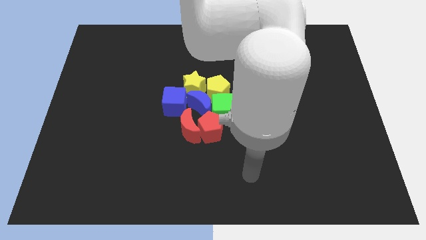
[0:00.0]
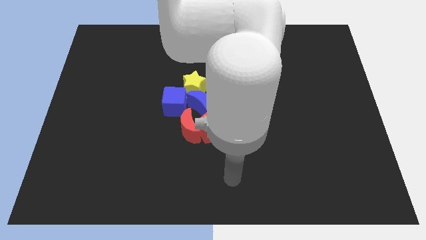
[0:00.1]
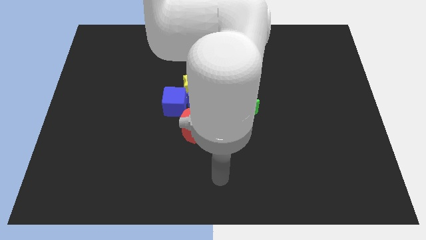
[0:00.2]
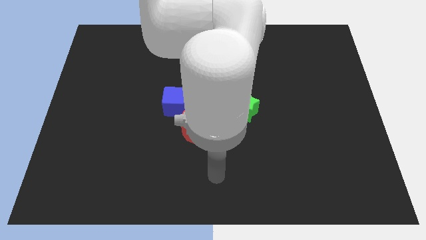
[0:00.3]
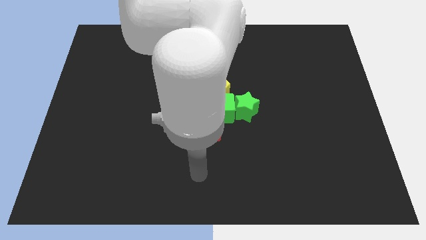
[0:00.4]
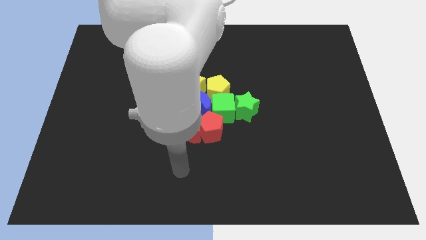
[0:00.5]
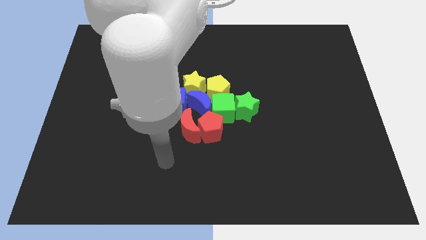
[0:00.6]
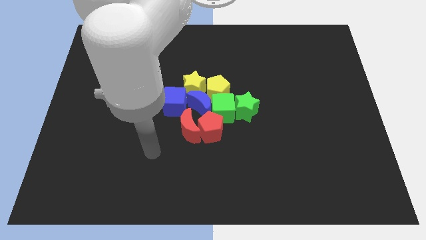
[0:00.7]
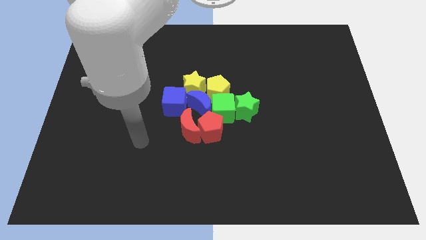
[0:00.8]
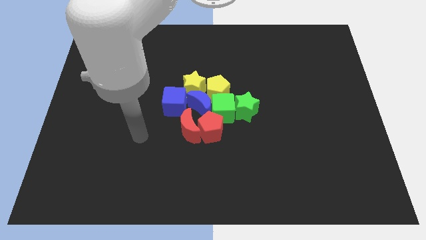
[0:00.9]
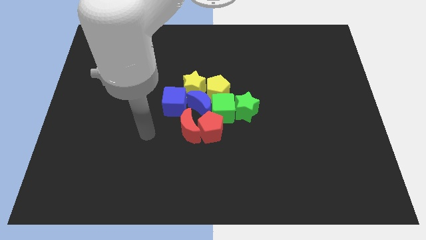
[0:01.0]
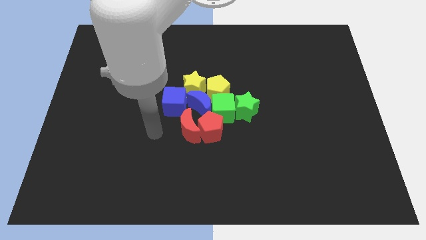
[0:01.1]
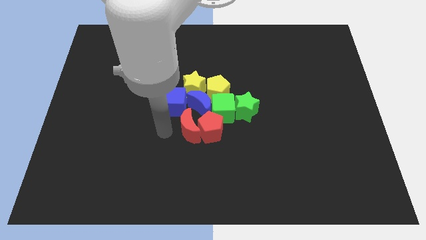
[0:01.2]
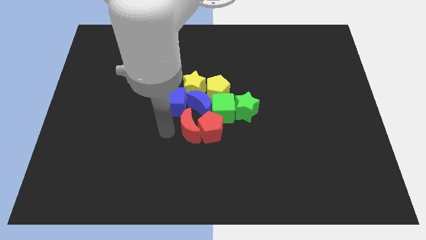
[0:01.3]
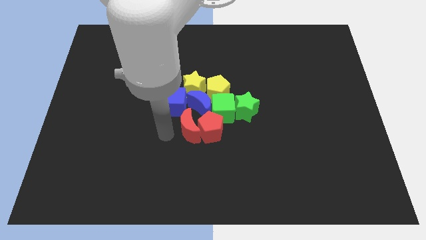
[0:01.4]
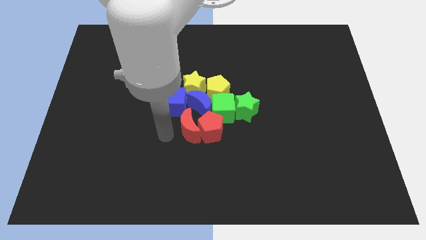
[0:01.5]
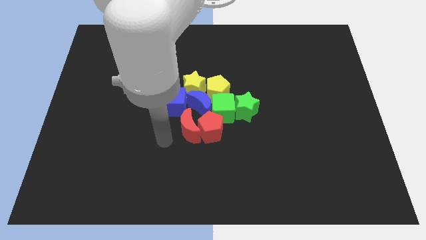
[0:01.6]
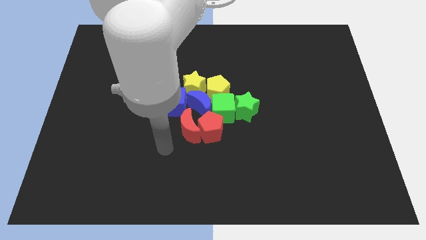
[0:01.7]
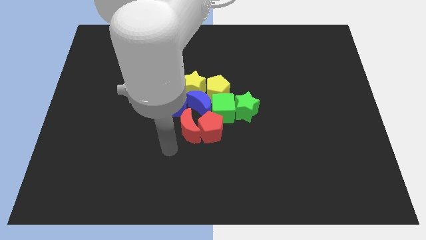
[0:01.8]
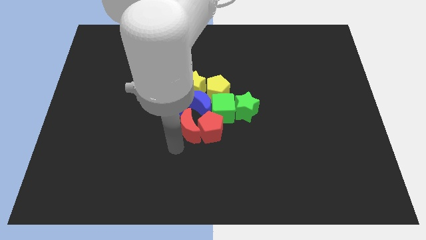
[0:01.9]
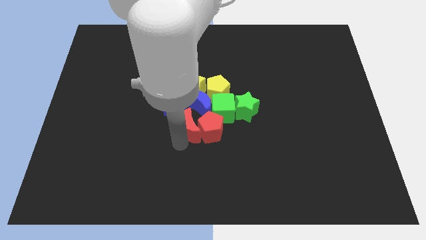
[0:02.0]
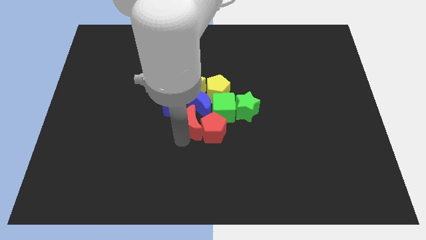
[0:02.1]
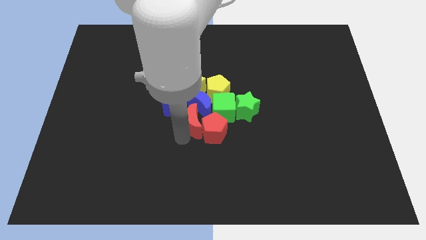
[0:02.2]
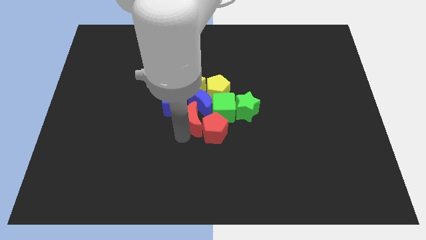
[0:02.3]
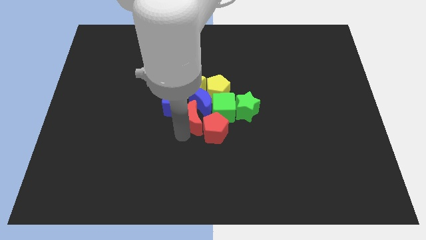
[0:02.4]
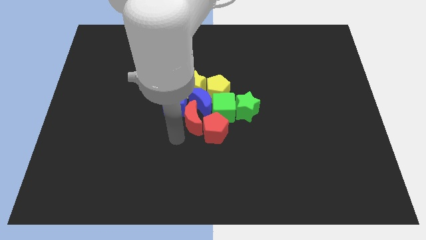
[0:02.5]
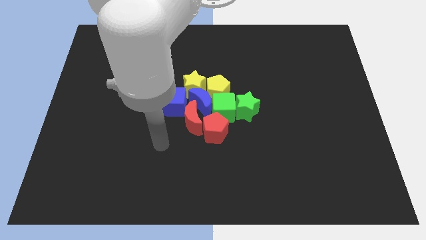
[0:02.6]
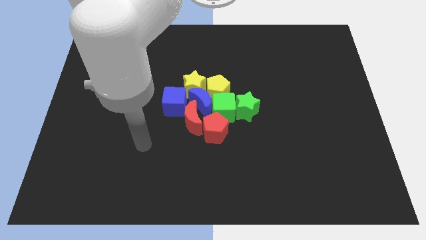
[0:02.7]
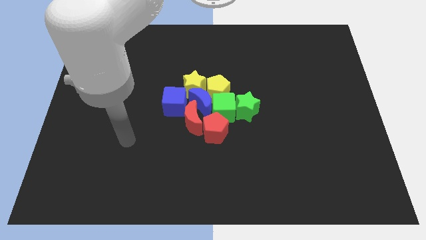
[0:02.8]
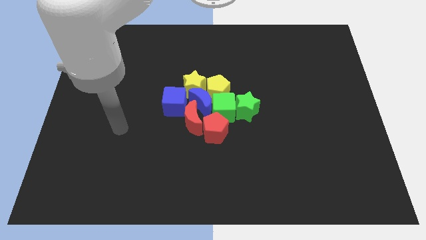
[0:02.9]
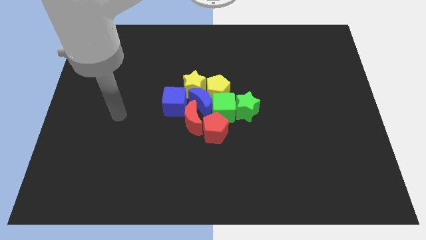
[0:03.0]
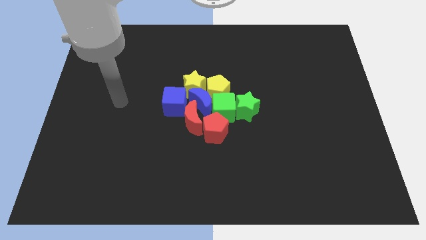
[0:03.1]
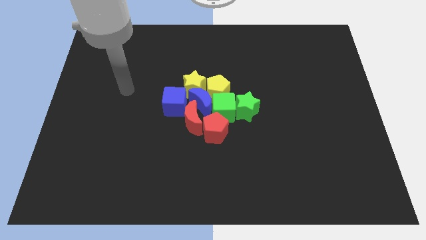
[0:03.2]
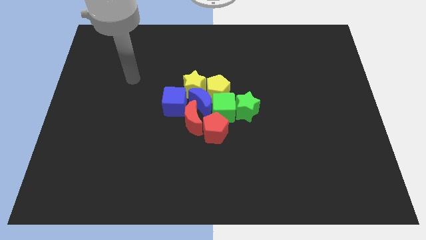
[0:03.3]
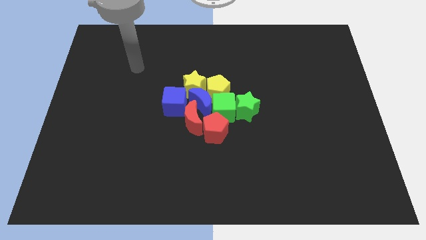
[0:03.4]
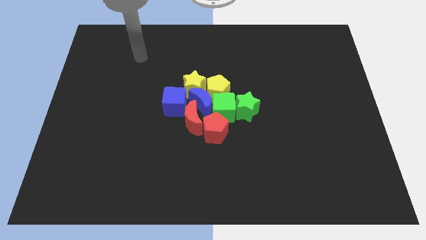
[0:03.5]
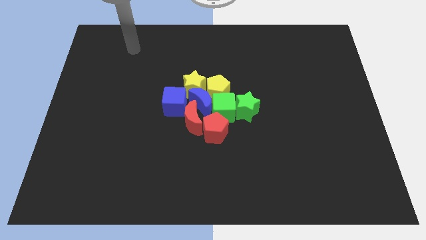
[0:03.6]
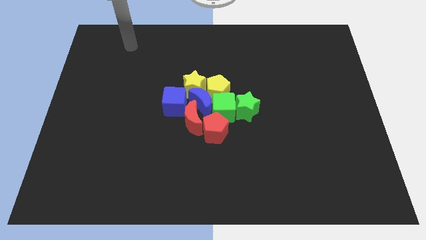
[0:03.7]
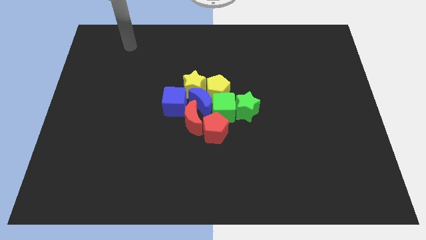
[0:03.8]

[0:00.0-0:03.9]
move the red crescent to the center of the board

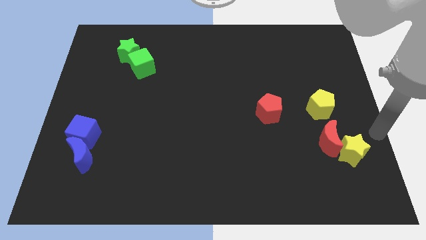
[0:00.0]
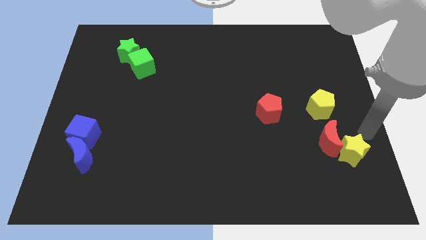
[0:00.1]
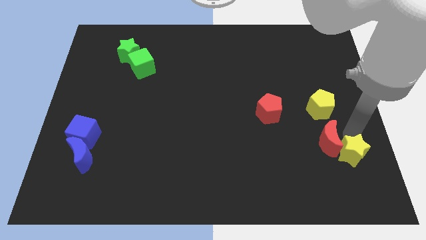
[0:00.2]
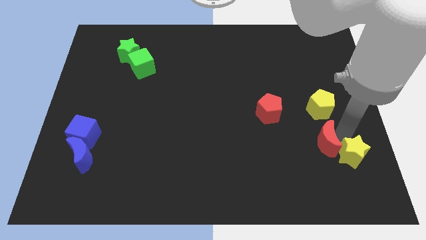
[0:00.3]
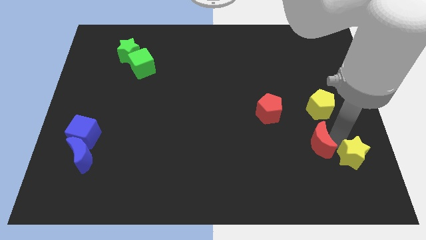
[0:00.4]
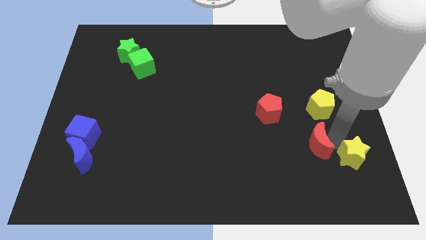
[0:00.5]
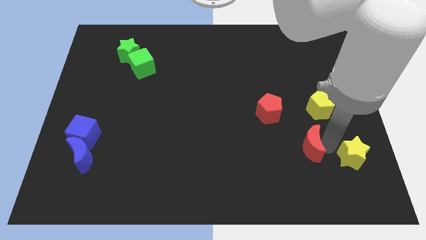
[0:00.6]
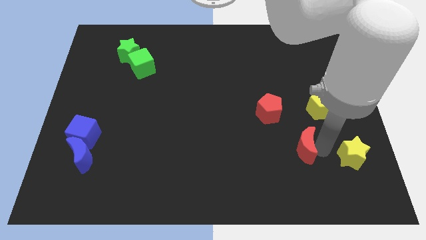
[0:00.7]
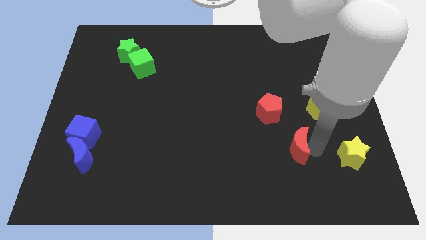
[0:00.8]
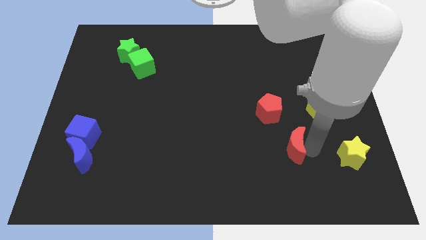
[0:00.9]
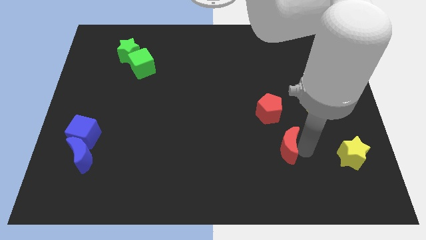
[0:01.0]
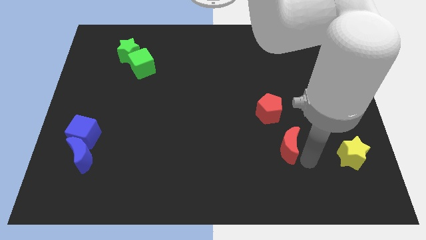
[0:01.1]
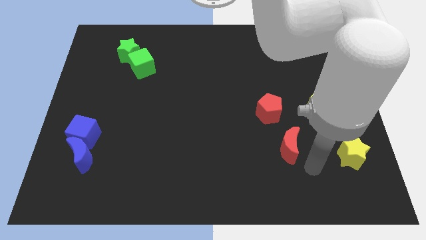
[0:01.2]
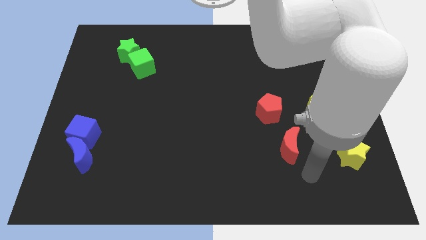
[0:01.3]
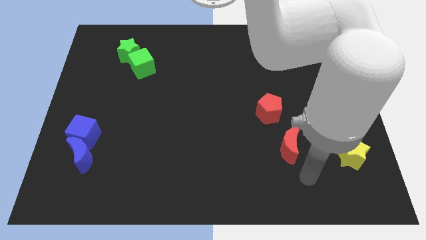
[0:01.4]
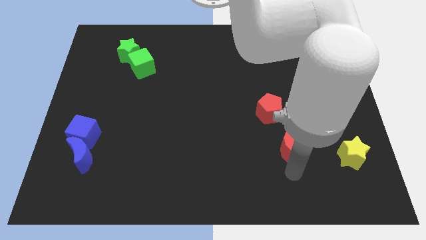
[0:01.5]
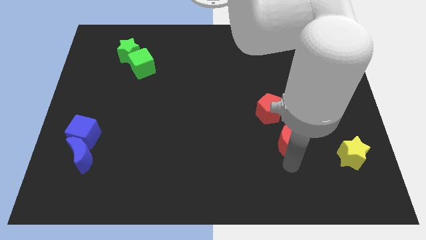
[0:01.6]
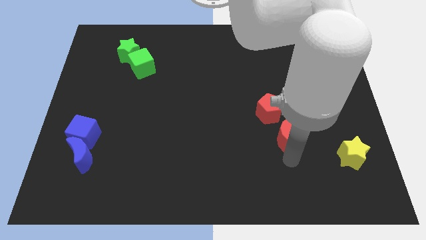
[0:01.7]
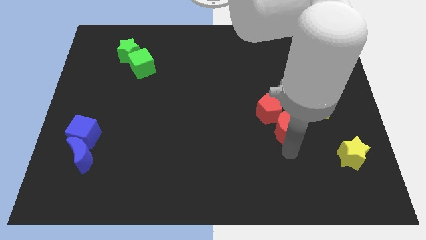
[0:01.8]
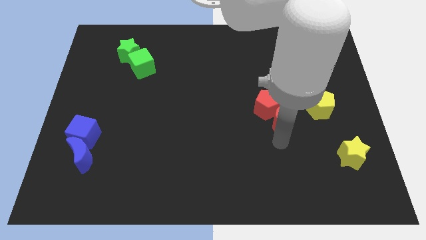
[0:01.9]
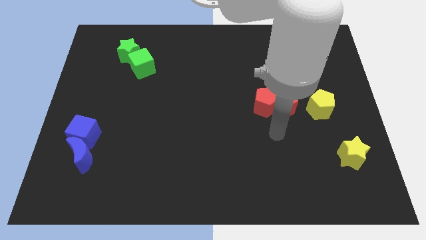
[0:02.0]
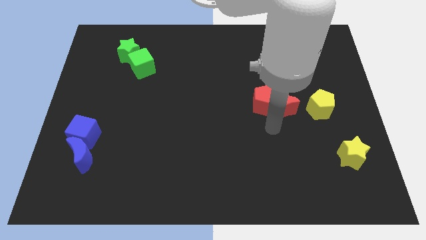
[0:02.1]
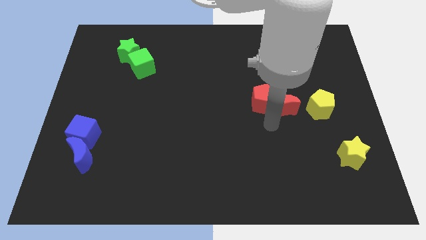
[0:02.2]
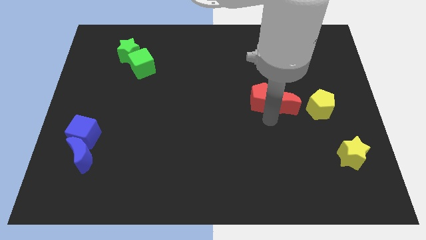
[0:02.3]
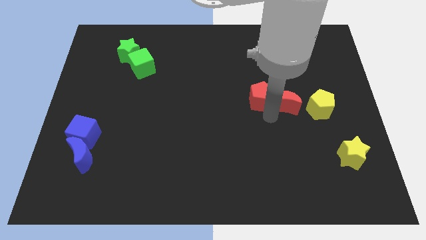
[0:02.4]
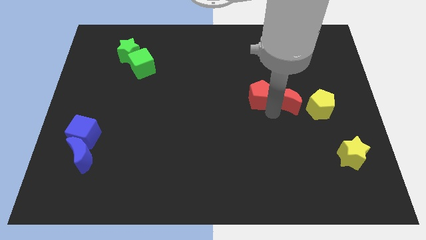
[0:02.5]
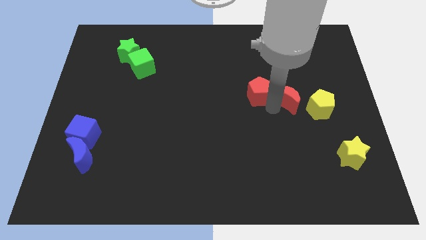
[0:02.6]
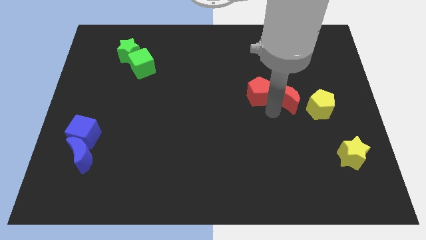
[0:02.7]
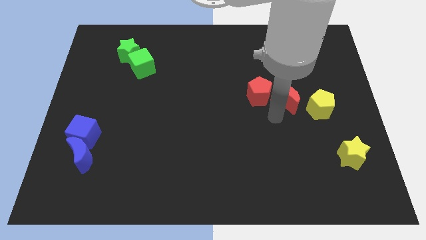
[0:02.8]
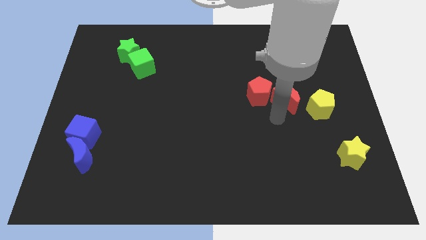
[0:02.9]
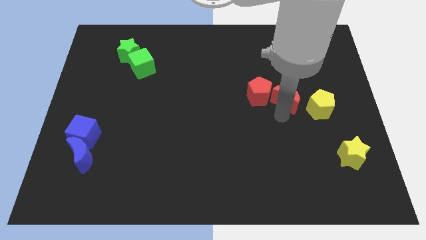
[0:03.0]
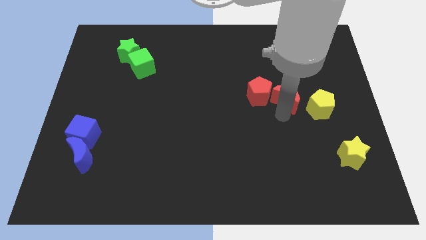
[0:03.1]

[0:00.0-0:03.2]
push the red crescent between the red pentagon and yellow pentagon

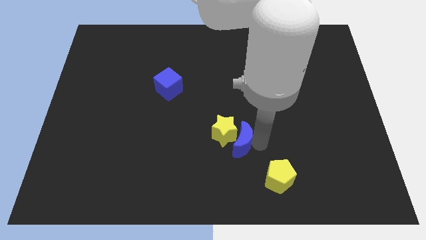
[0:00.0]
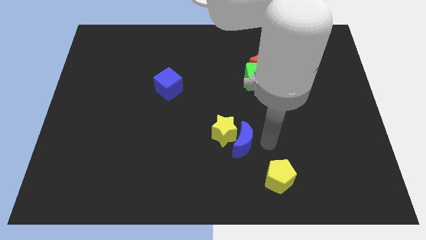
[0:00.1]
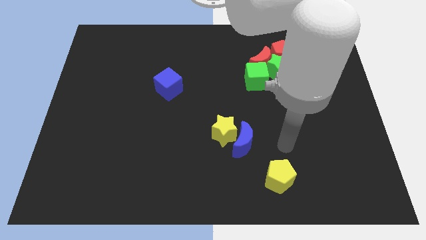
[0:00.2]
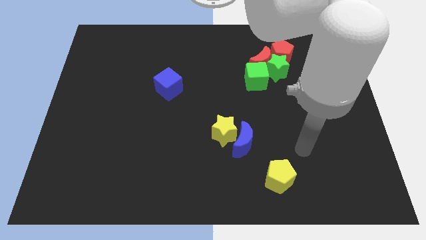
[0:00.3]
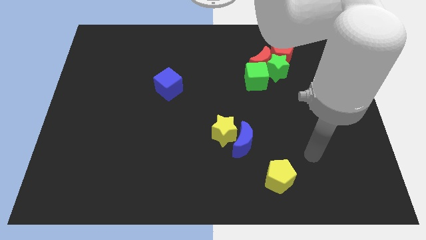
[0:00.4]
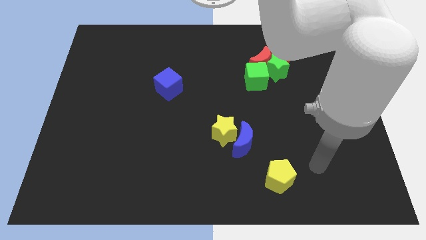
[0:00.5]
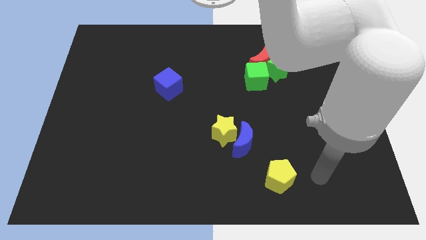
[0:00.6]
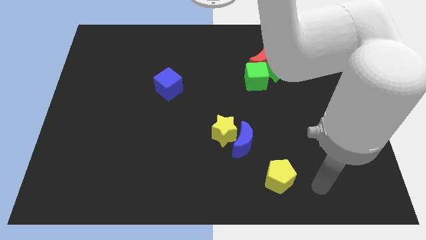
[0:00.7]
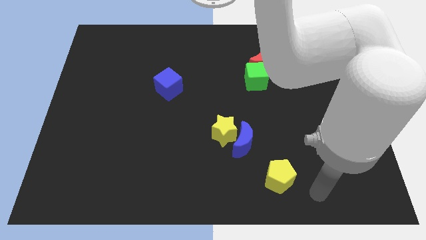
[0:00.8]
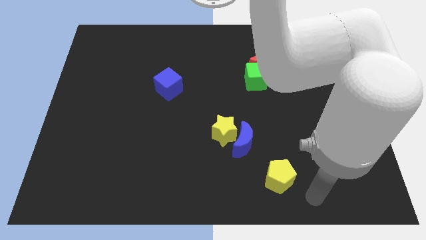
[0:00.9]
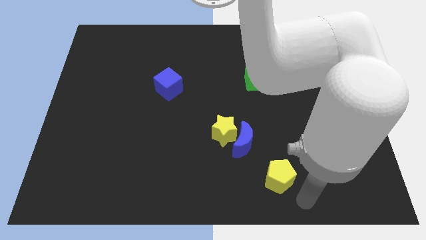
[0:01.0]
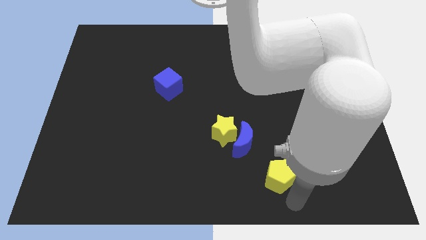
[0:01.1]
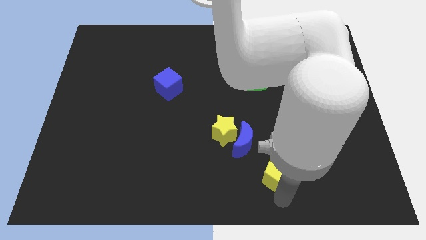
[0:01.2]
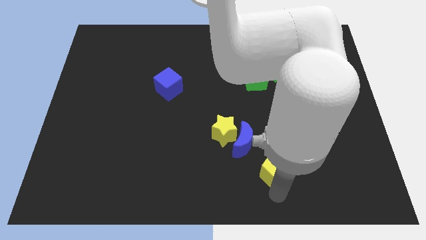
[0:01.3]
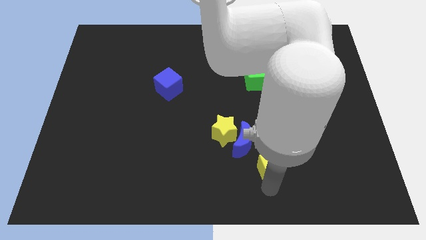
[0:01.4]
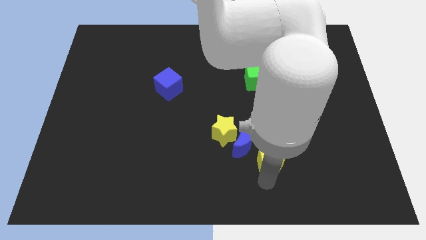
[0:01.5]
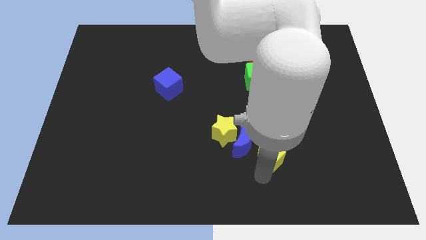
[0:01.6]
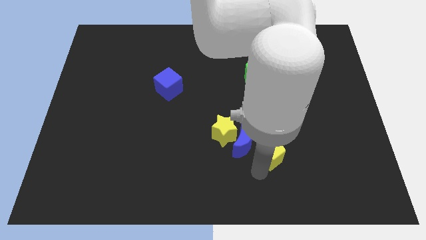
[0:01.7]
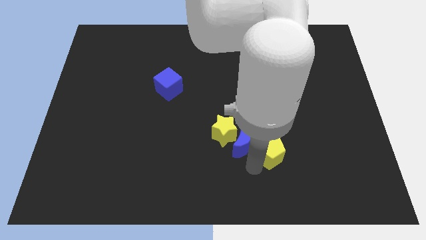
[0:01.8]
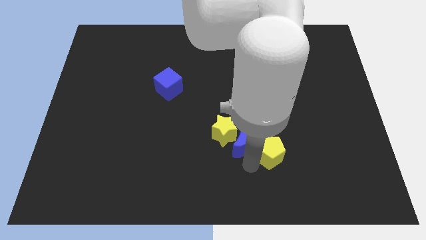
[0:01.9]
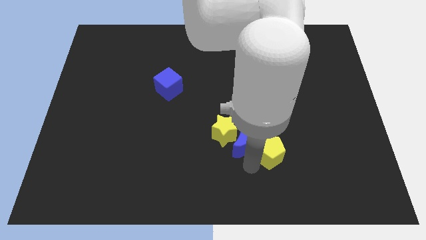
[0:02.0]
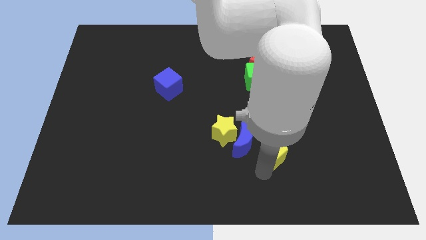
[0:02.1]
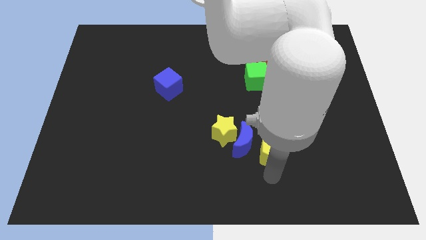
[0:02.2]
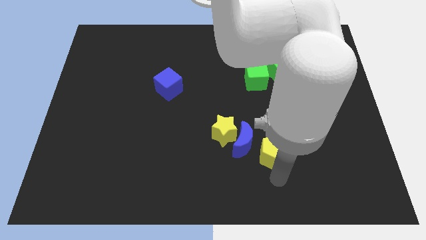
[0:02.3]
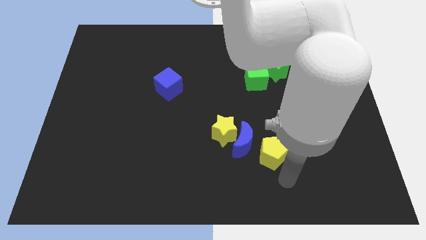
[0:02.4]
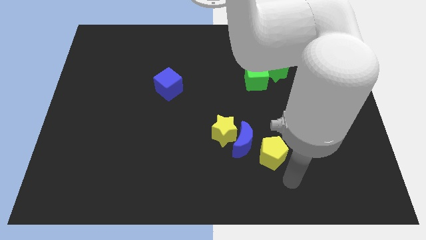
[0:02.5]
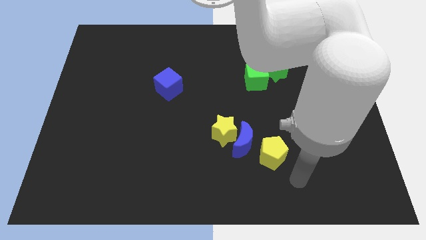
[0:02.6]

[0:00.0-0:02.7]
place yellow pentagon beside blue moon
